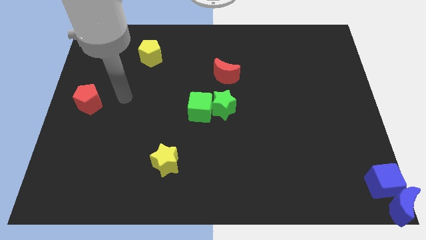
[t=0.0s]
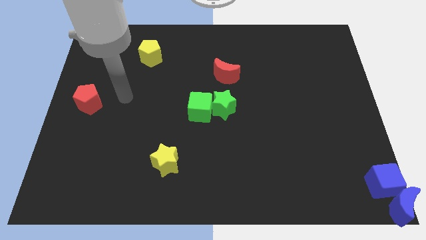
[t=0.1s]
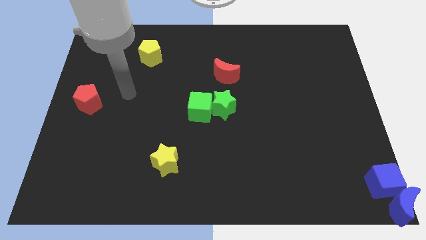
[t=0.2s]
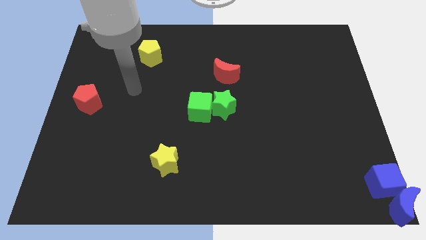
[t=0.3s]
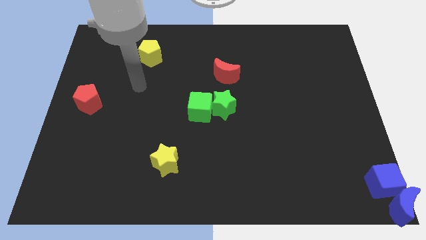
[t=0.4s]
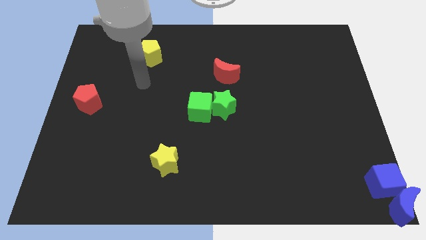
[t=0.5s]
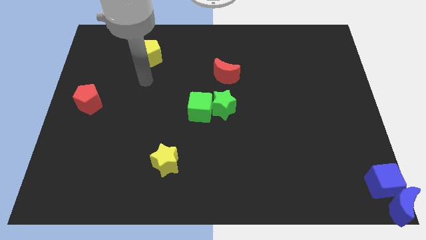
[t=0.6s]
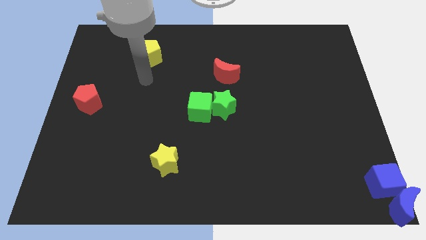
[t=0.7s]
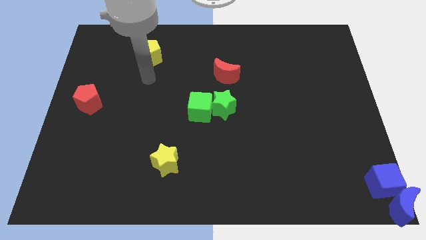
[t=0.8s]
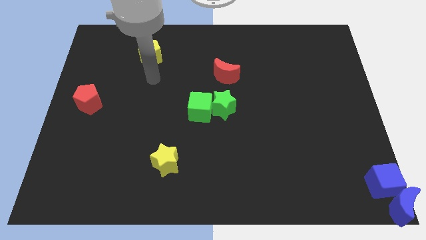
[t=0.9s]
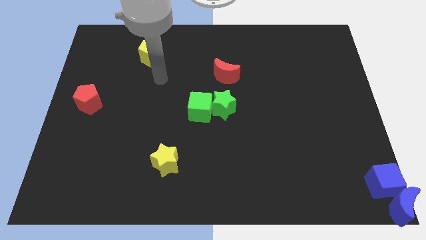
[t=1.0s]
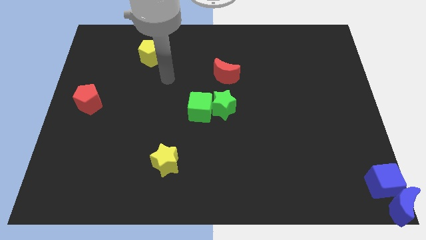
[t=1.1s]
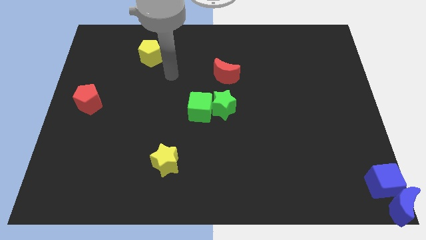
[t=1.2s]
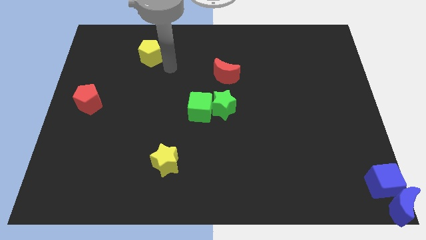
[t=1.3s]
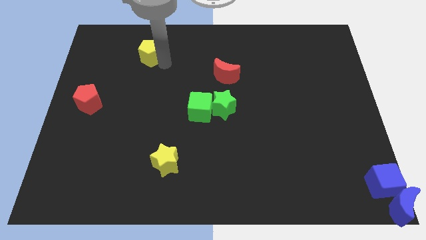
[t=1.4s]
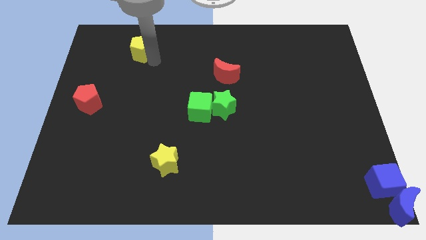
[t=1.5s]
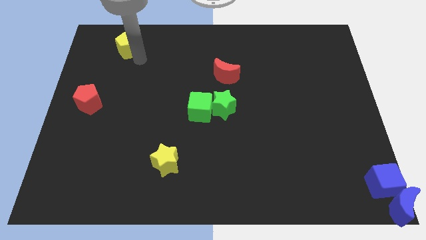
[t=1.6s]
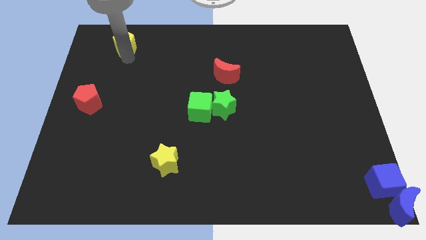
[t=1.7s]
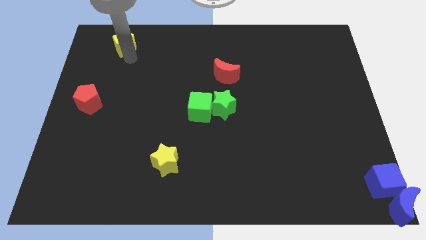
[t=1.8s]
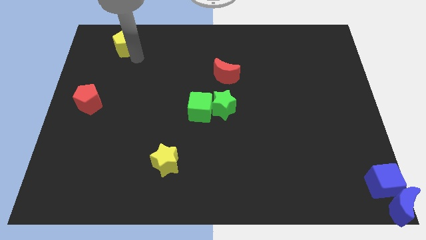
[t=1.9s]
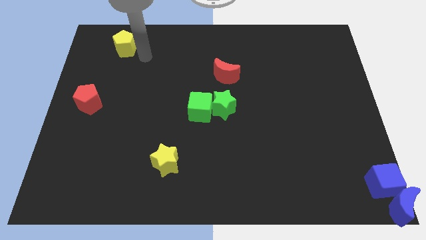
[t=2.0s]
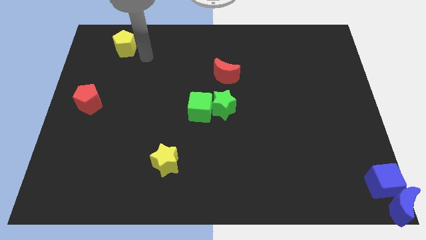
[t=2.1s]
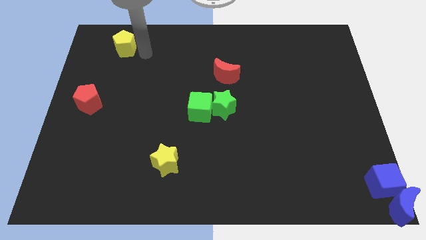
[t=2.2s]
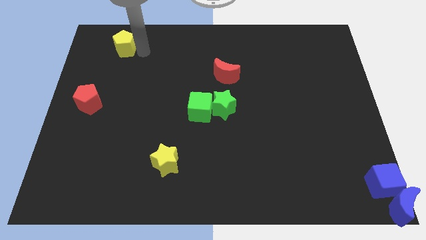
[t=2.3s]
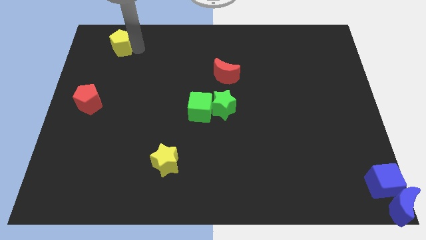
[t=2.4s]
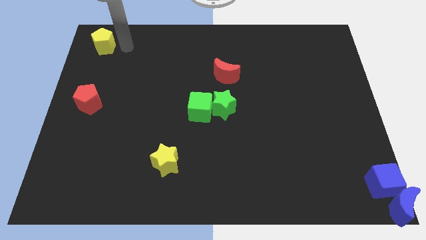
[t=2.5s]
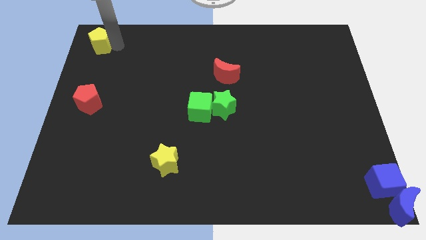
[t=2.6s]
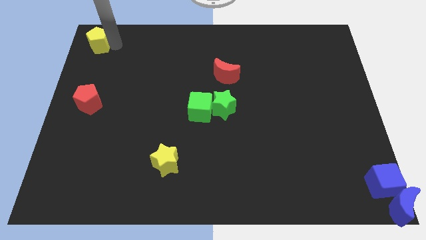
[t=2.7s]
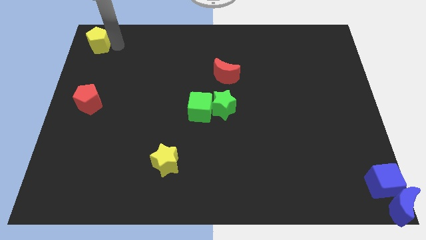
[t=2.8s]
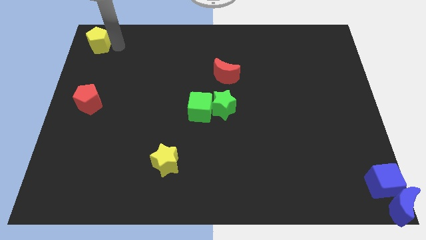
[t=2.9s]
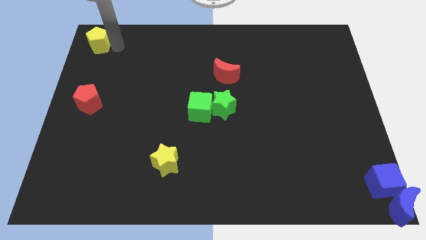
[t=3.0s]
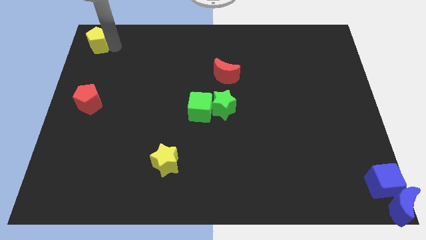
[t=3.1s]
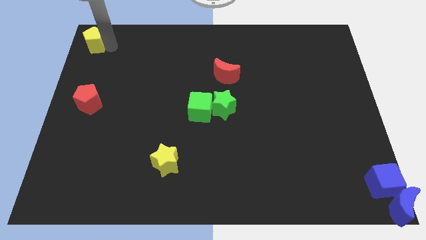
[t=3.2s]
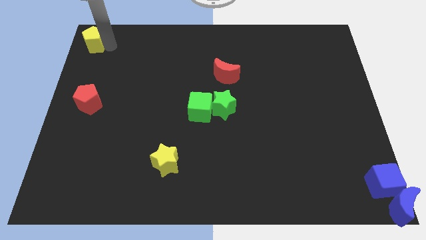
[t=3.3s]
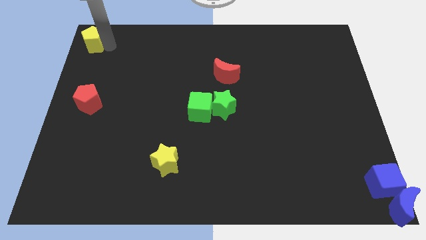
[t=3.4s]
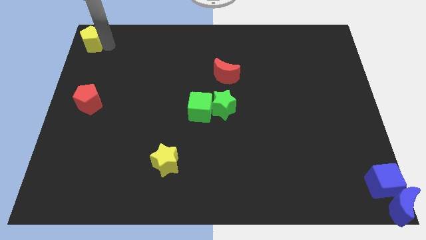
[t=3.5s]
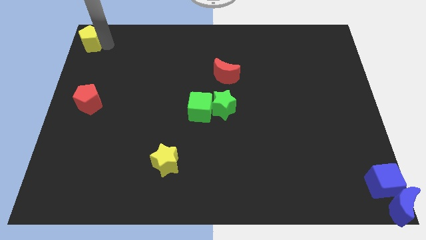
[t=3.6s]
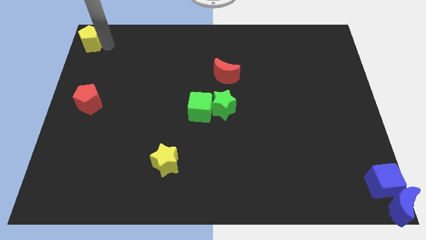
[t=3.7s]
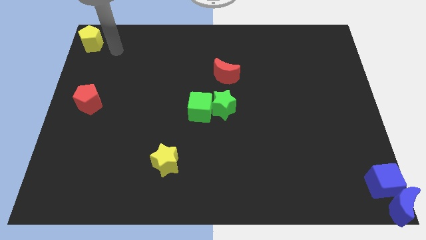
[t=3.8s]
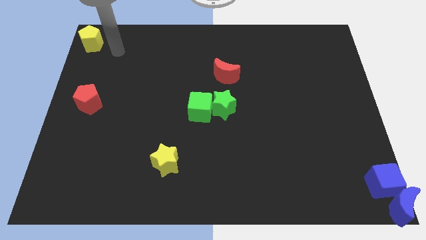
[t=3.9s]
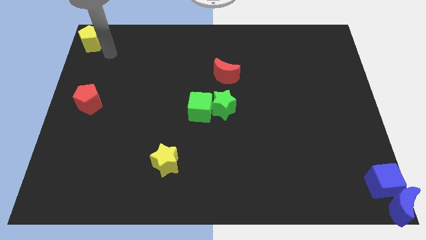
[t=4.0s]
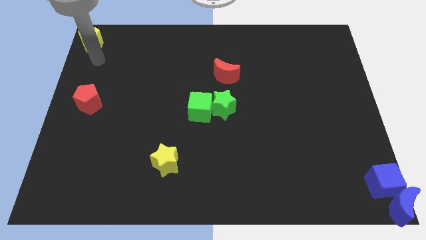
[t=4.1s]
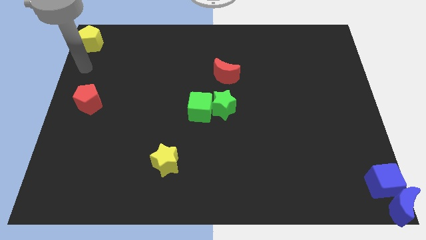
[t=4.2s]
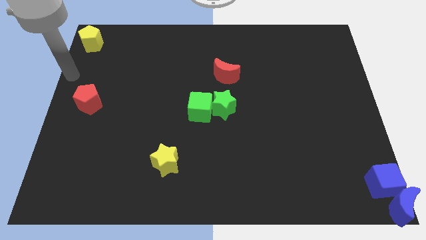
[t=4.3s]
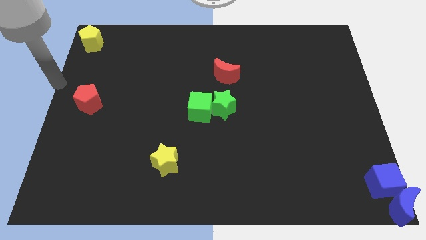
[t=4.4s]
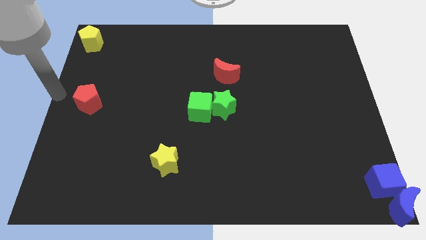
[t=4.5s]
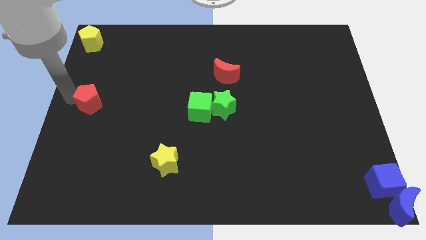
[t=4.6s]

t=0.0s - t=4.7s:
move the yellow pentagon to the top left corner of the board

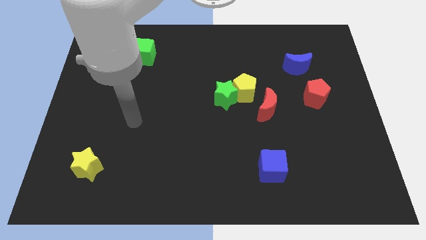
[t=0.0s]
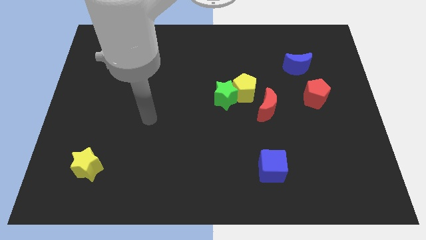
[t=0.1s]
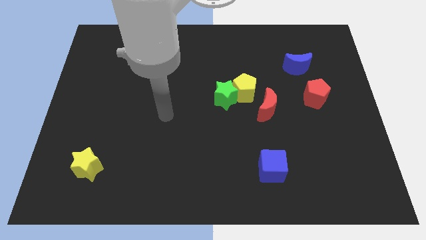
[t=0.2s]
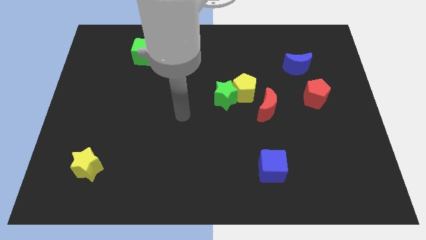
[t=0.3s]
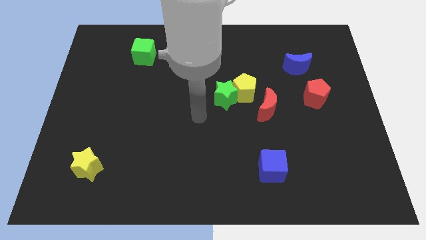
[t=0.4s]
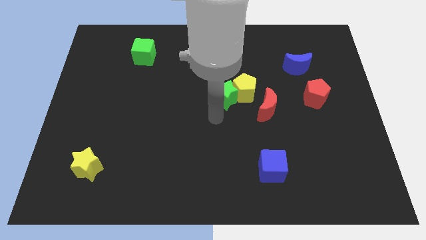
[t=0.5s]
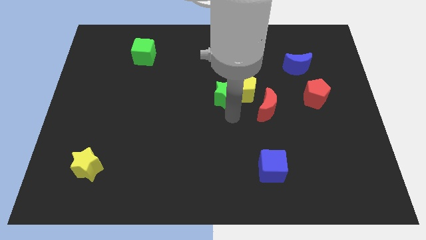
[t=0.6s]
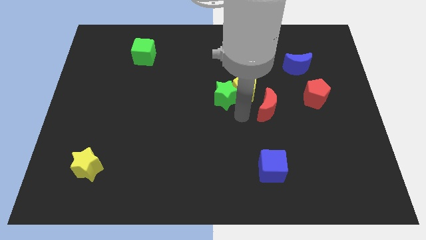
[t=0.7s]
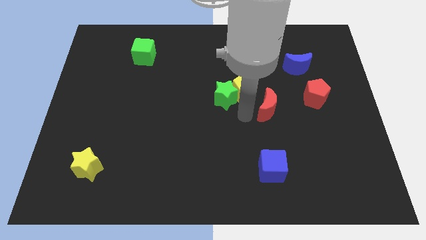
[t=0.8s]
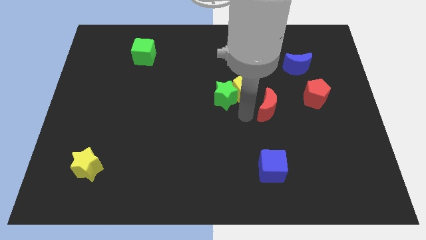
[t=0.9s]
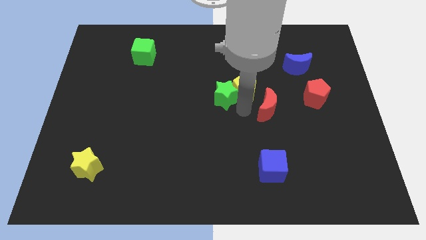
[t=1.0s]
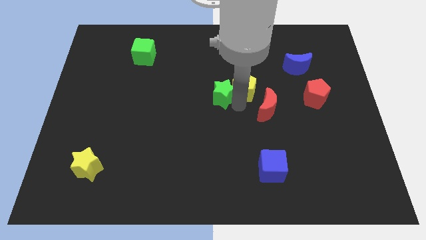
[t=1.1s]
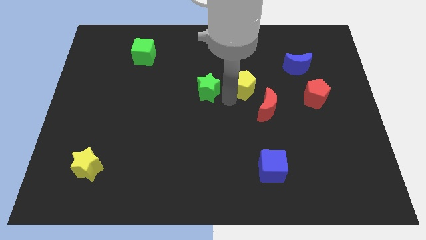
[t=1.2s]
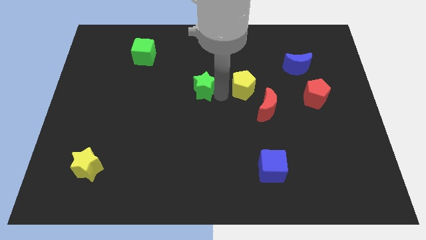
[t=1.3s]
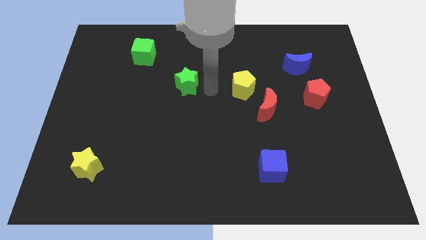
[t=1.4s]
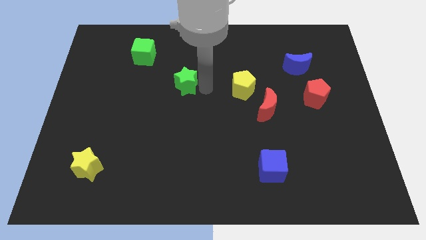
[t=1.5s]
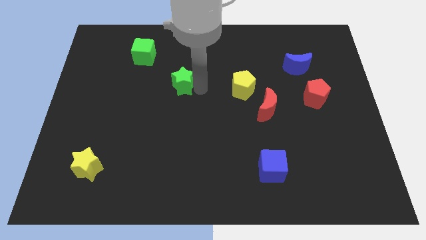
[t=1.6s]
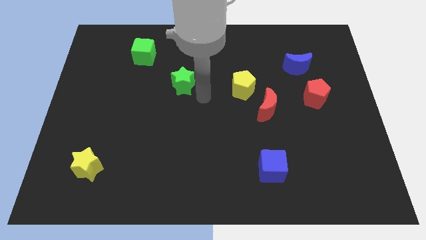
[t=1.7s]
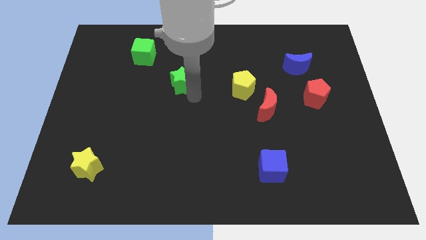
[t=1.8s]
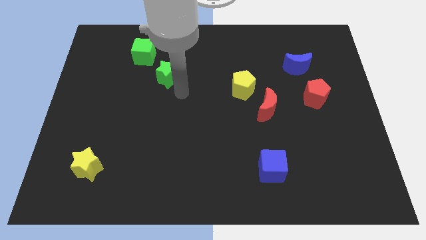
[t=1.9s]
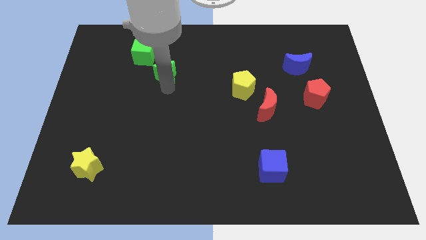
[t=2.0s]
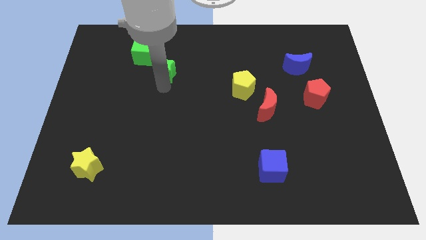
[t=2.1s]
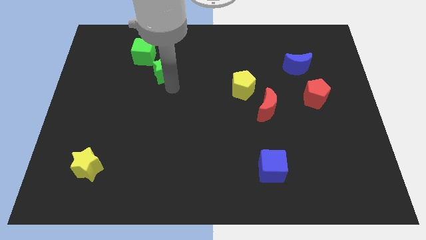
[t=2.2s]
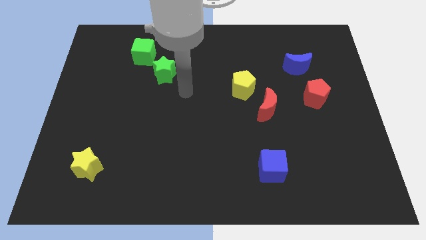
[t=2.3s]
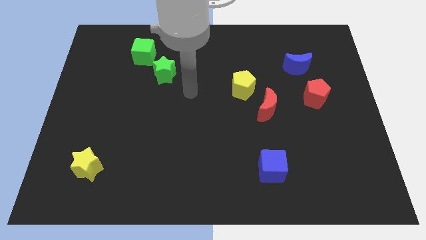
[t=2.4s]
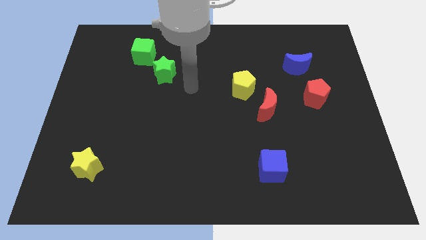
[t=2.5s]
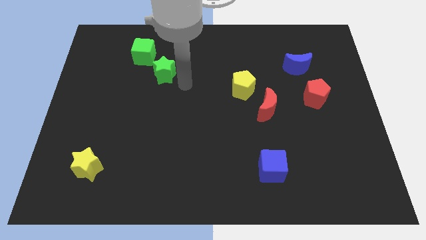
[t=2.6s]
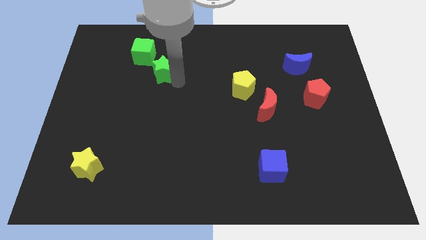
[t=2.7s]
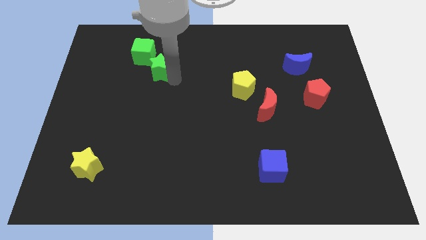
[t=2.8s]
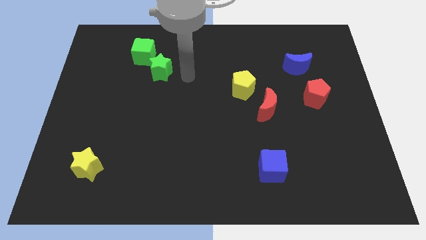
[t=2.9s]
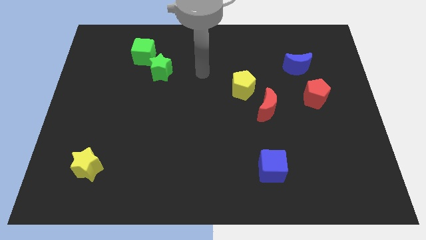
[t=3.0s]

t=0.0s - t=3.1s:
move the green star at the bottom right side of the green cube

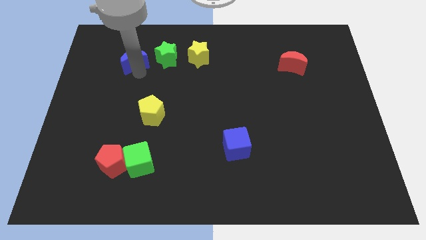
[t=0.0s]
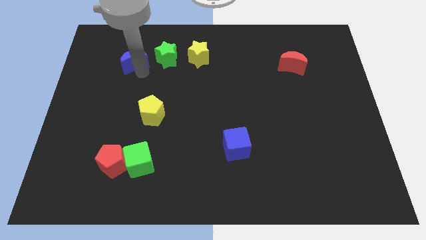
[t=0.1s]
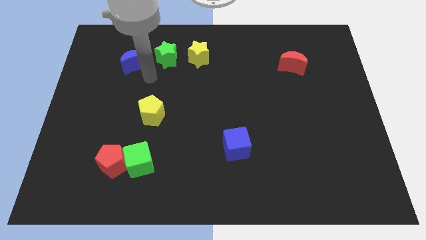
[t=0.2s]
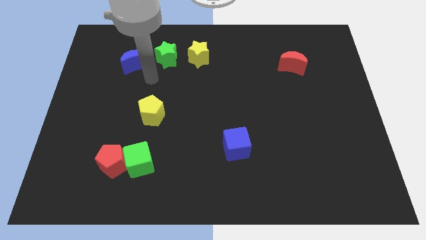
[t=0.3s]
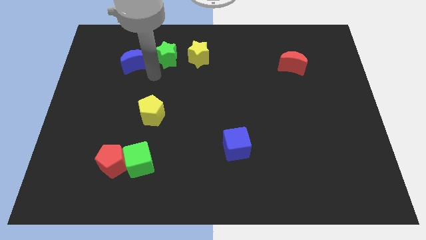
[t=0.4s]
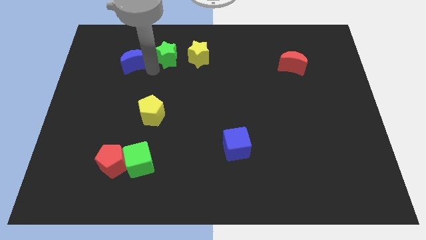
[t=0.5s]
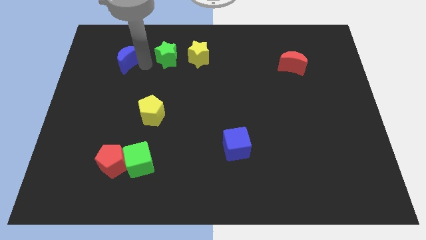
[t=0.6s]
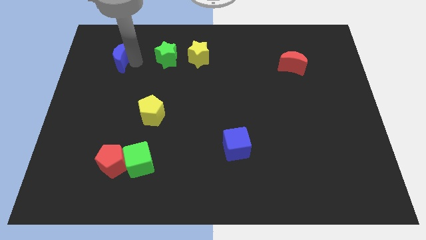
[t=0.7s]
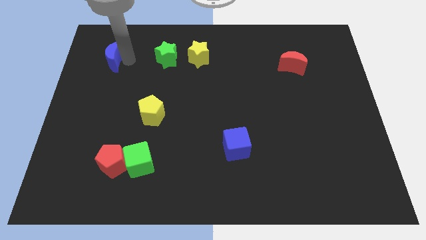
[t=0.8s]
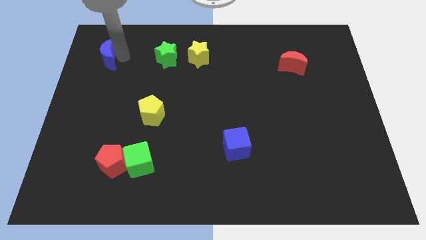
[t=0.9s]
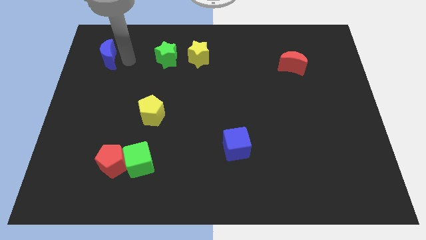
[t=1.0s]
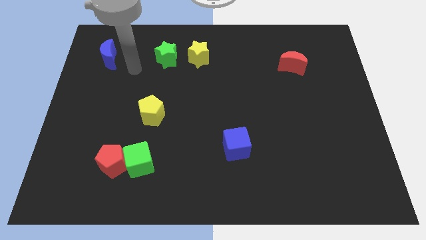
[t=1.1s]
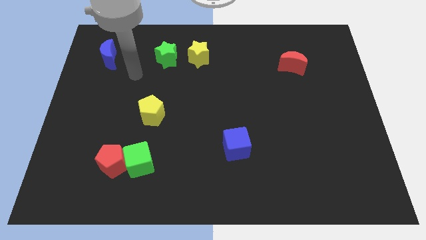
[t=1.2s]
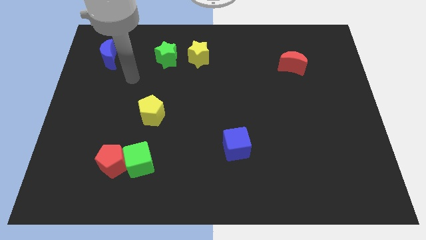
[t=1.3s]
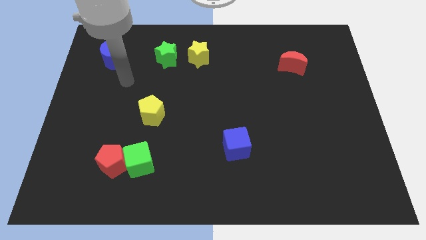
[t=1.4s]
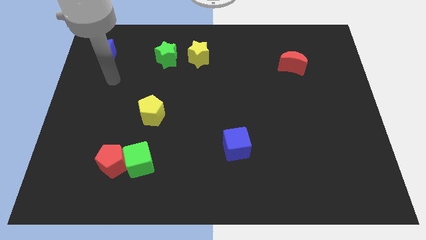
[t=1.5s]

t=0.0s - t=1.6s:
move the blue crescent slightly towards the left
